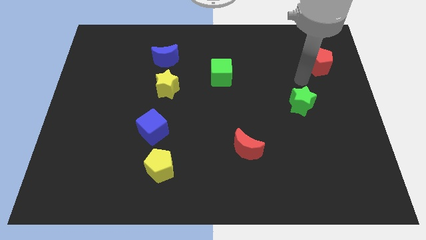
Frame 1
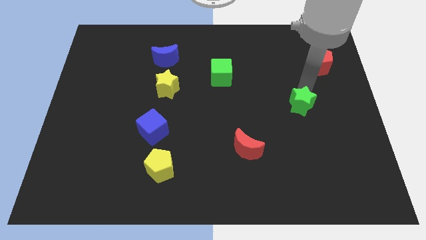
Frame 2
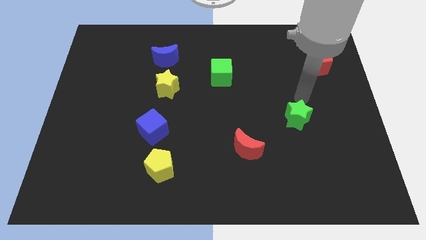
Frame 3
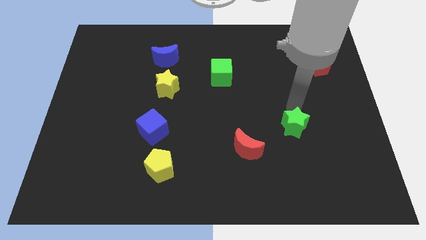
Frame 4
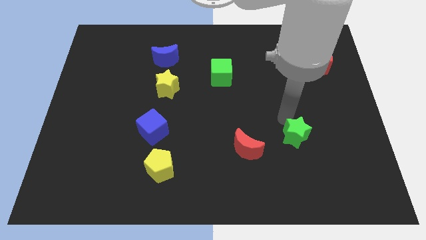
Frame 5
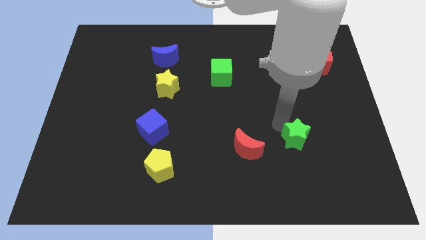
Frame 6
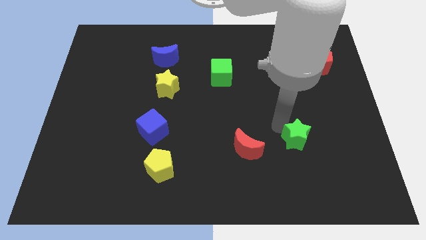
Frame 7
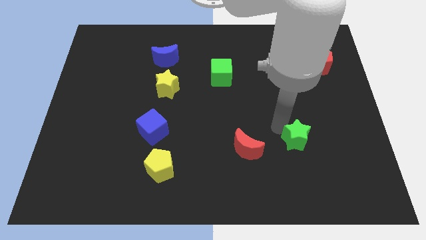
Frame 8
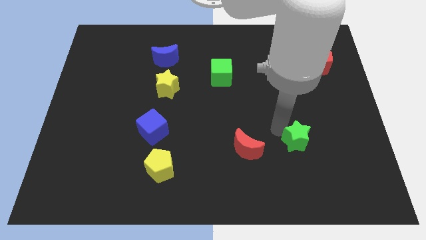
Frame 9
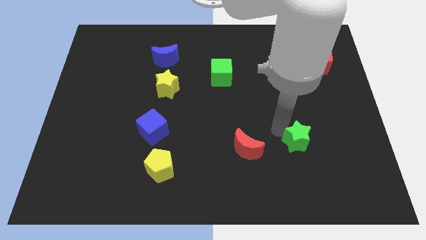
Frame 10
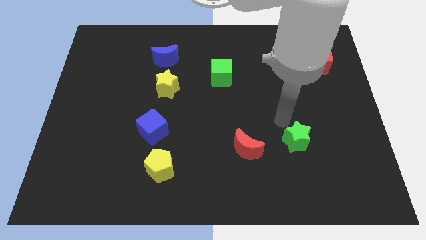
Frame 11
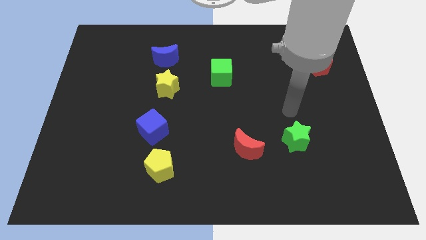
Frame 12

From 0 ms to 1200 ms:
place the green star above the red moon

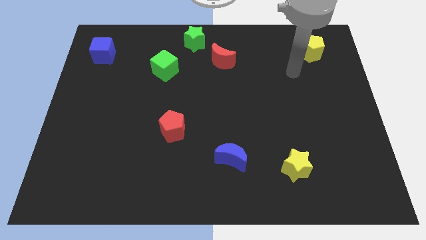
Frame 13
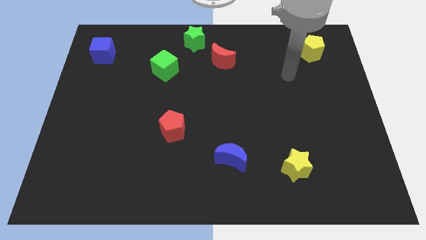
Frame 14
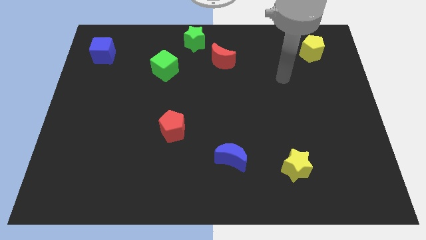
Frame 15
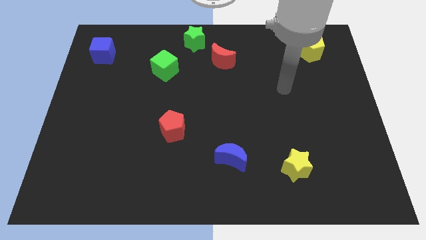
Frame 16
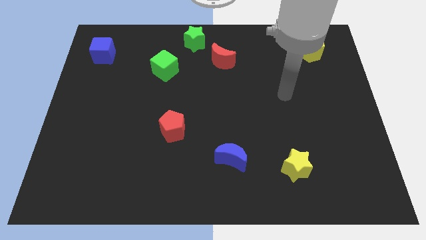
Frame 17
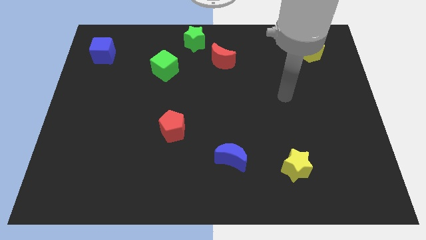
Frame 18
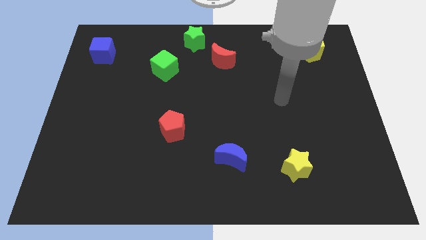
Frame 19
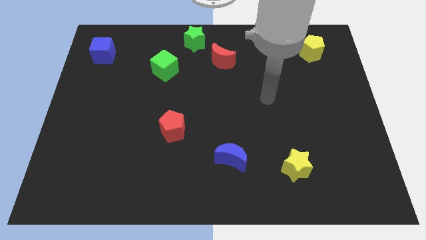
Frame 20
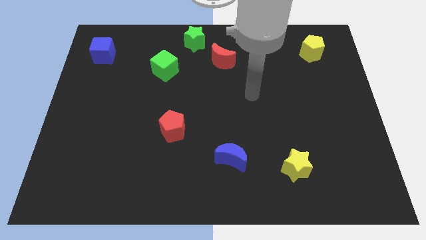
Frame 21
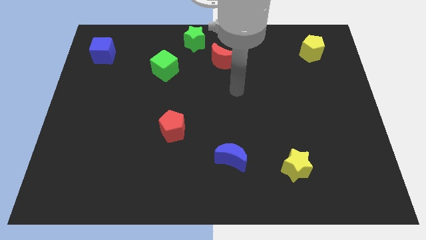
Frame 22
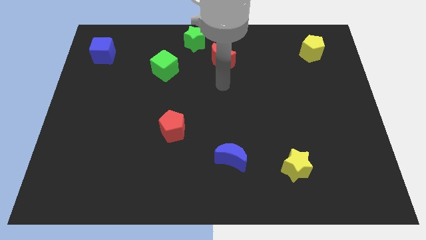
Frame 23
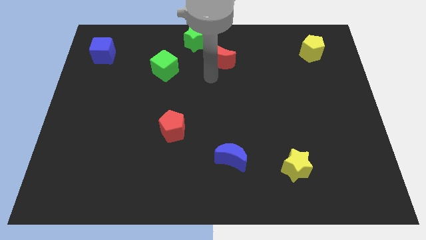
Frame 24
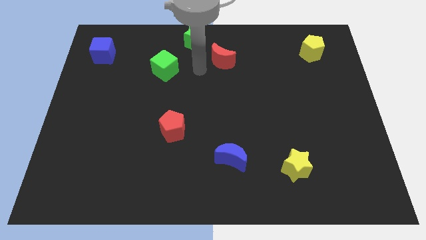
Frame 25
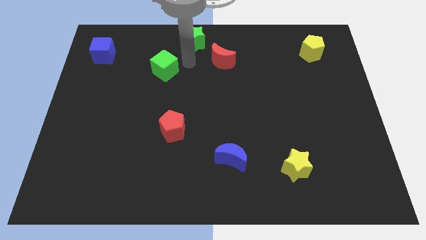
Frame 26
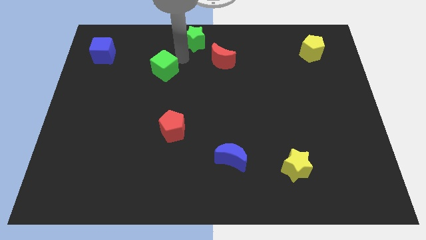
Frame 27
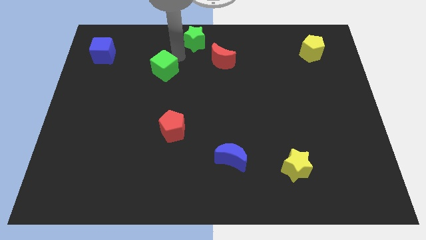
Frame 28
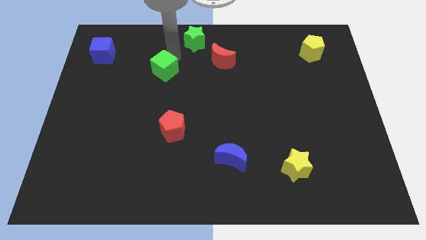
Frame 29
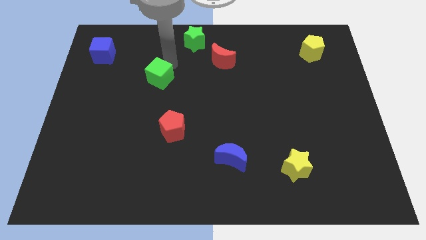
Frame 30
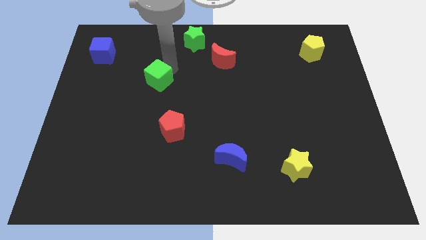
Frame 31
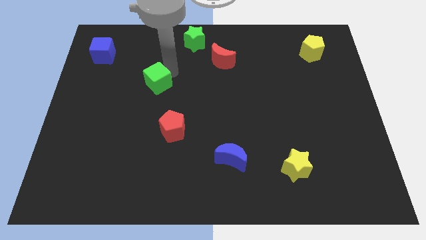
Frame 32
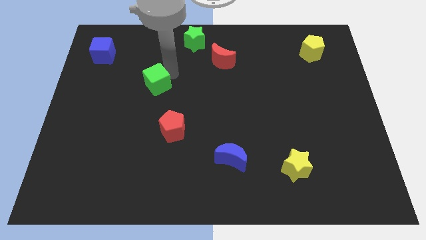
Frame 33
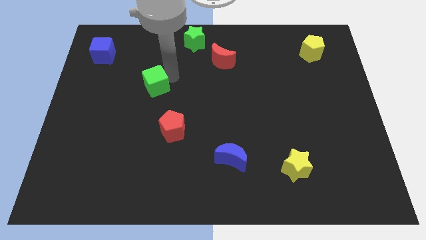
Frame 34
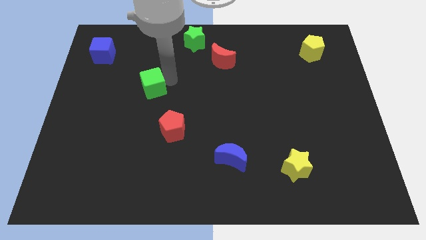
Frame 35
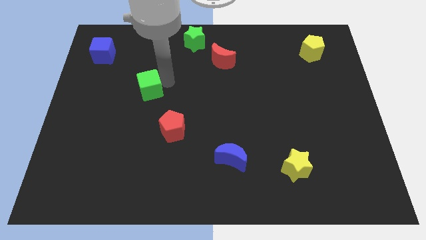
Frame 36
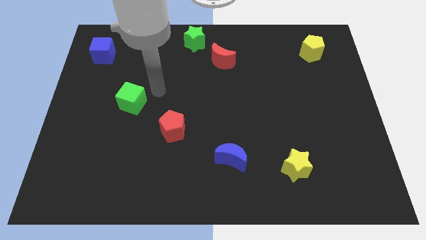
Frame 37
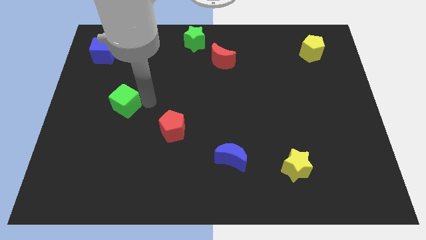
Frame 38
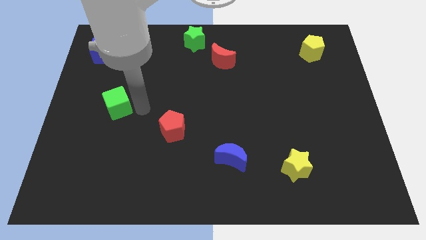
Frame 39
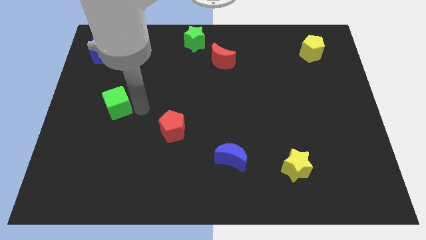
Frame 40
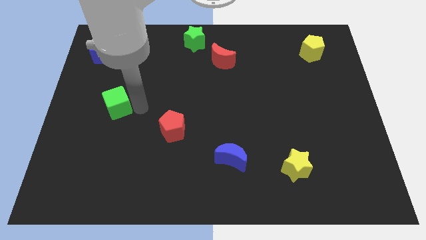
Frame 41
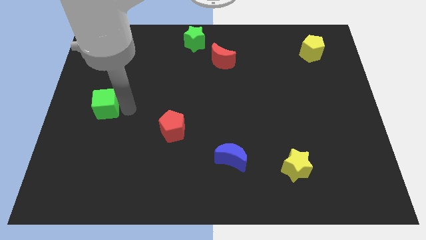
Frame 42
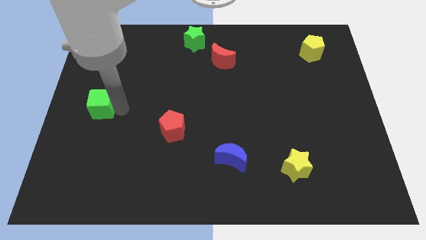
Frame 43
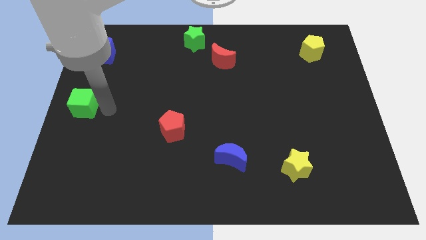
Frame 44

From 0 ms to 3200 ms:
move the green cube towards the center left of the board

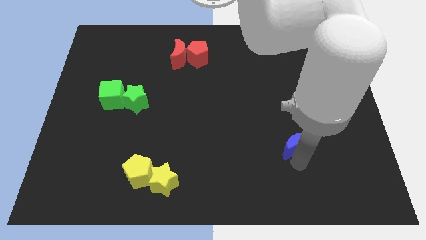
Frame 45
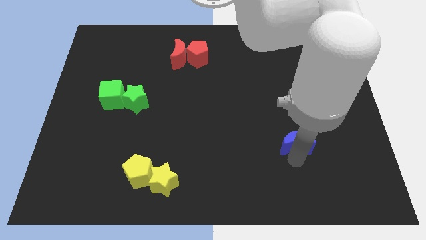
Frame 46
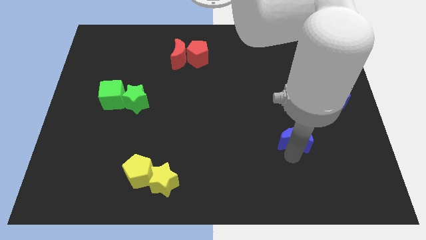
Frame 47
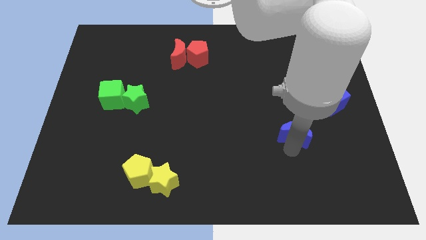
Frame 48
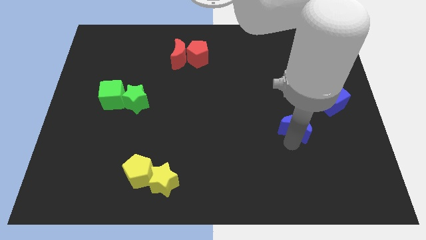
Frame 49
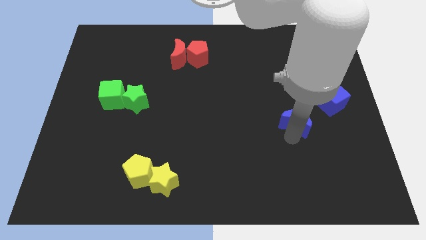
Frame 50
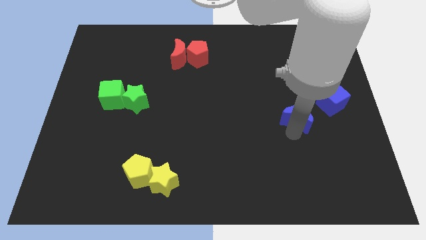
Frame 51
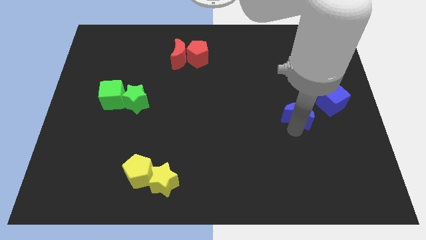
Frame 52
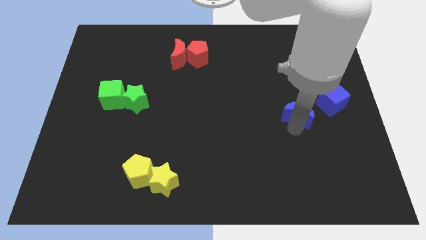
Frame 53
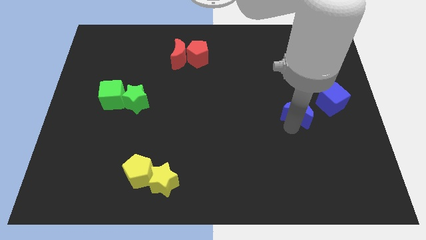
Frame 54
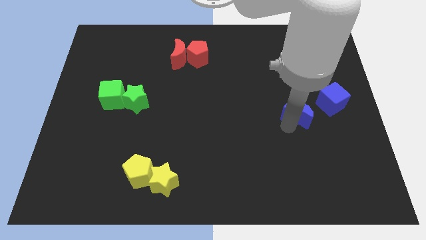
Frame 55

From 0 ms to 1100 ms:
push the blue crescent to the top of the board

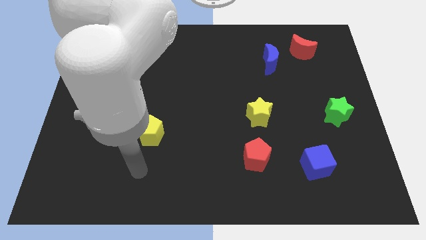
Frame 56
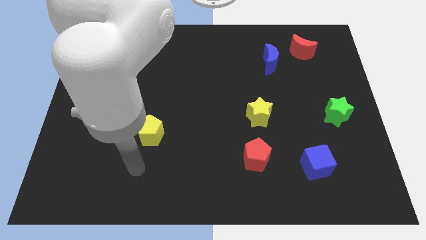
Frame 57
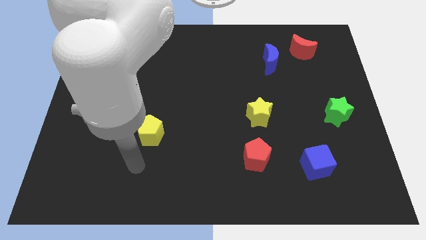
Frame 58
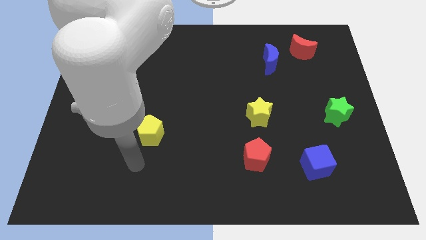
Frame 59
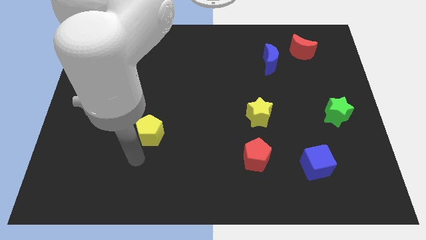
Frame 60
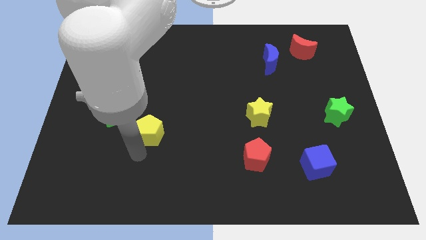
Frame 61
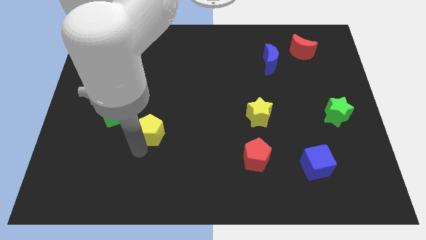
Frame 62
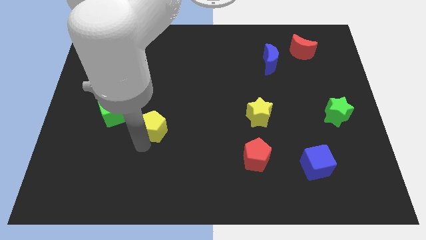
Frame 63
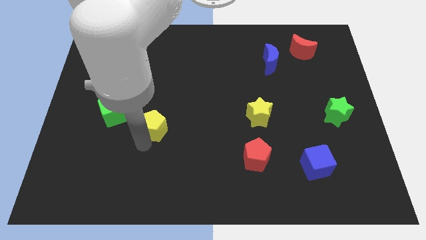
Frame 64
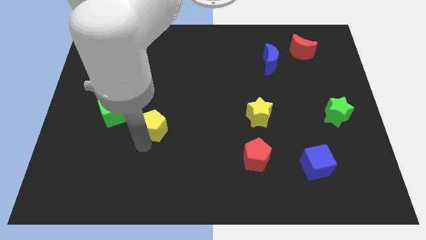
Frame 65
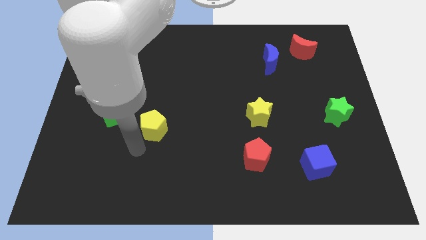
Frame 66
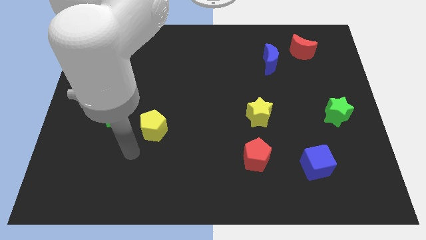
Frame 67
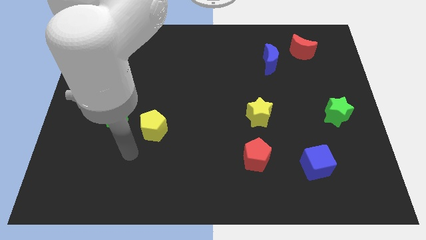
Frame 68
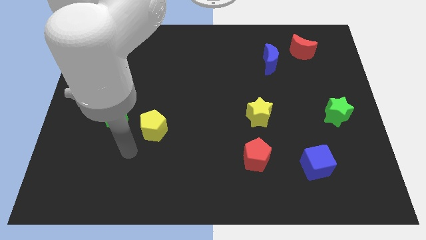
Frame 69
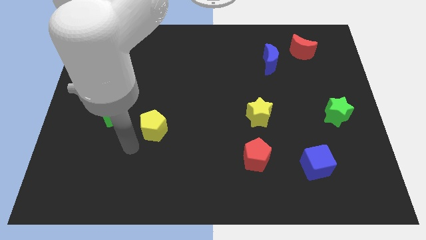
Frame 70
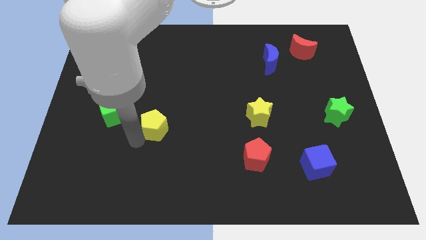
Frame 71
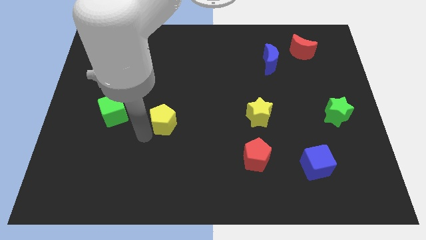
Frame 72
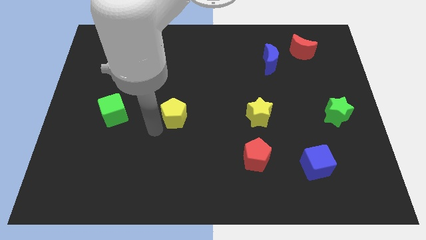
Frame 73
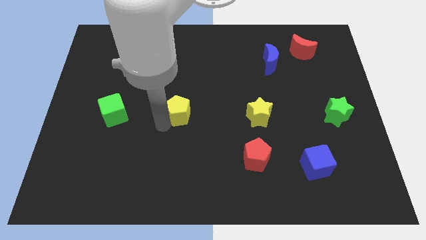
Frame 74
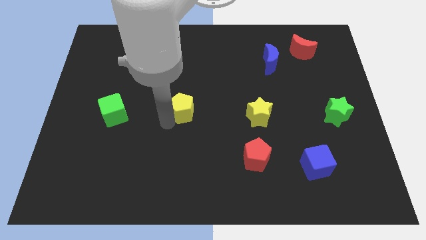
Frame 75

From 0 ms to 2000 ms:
push the yellow pentagon to the left of the yellow star

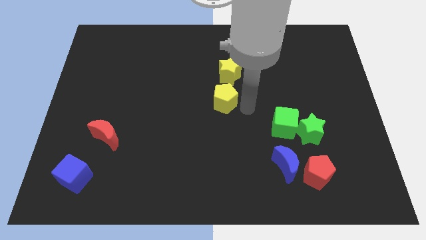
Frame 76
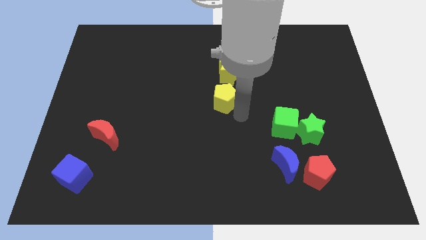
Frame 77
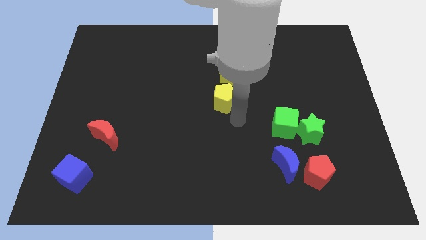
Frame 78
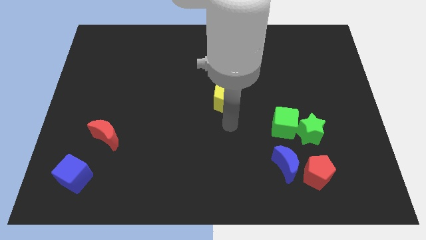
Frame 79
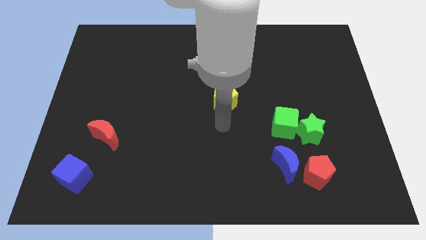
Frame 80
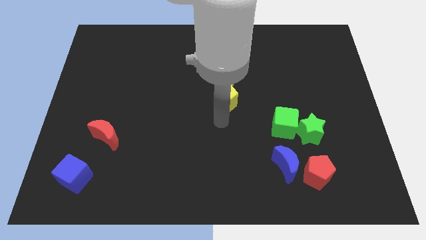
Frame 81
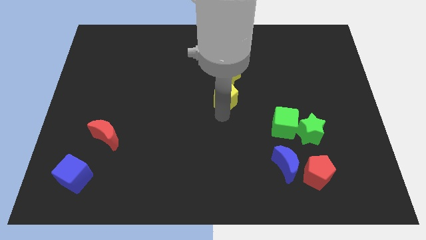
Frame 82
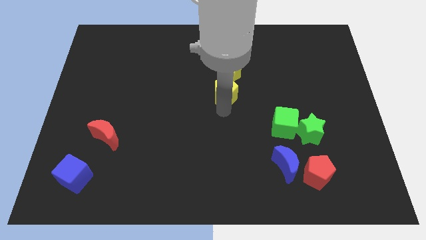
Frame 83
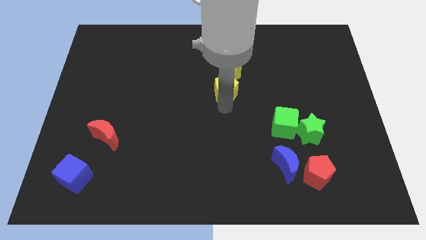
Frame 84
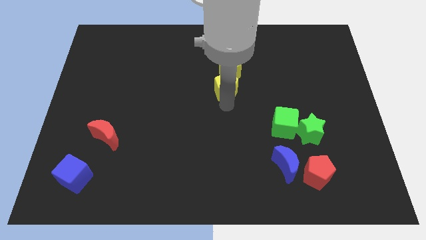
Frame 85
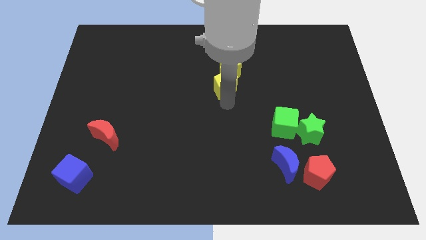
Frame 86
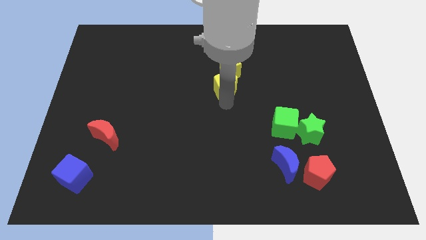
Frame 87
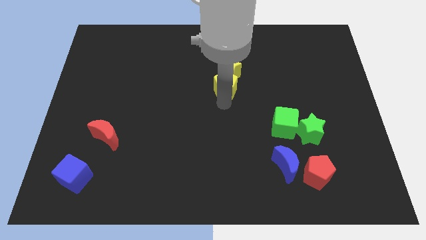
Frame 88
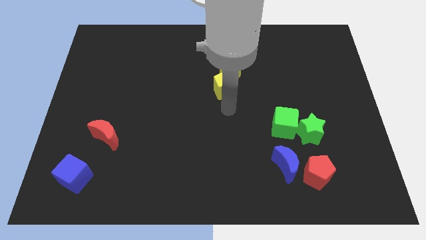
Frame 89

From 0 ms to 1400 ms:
push the yellow pentagon close to the yellow star

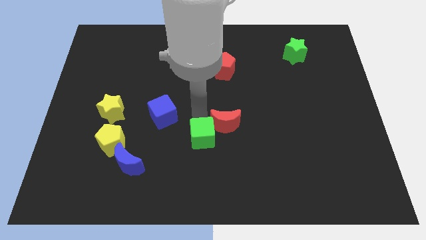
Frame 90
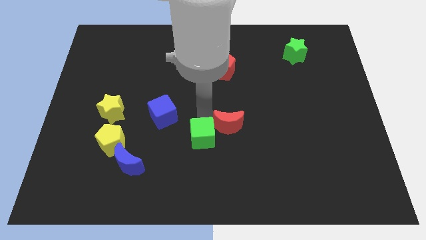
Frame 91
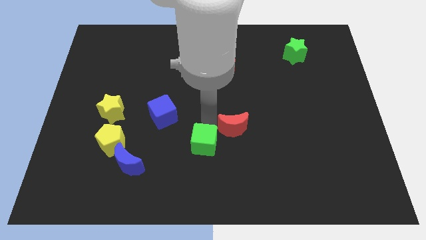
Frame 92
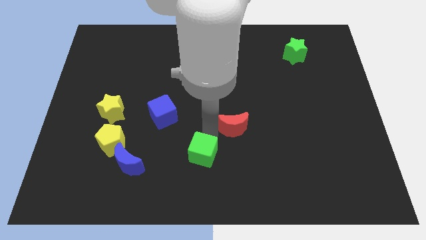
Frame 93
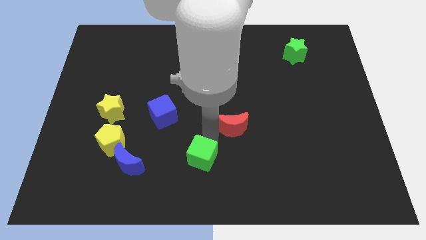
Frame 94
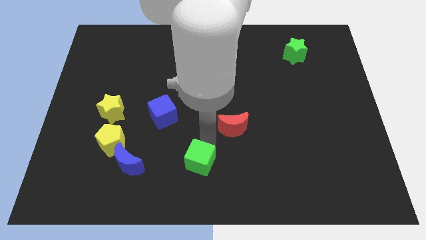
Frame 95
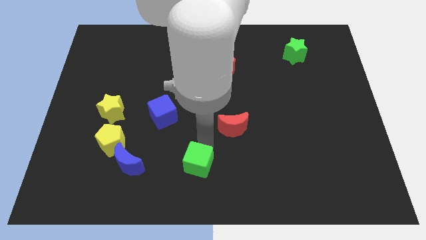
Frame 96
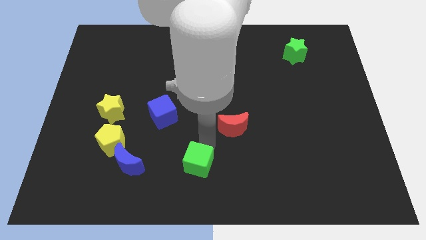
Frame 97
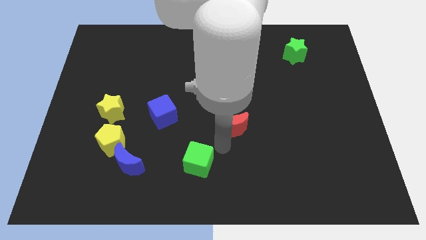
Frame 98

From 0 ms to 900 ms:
separate green cube from red moon
